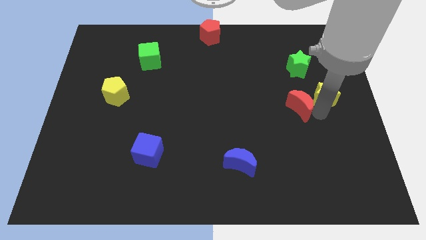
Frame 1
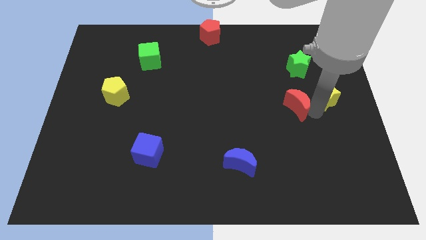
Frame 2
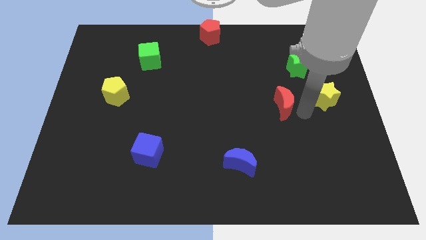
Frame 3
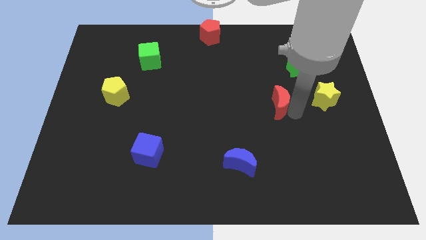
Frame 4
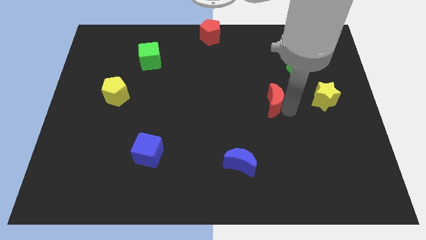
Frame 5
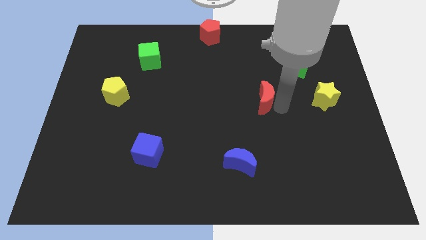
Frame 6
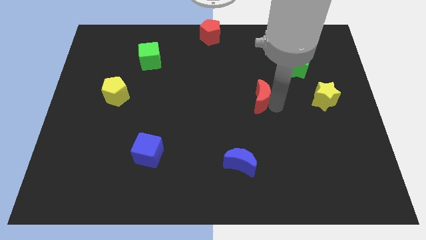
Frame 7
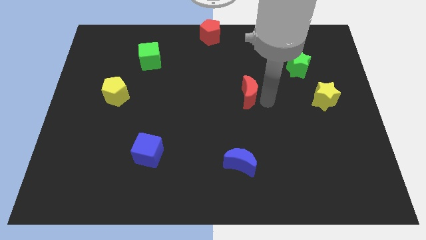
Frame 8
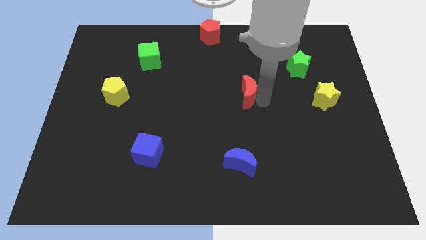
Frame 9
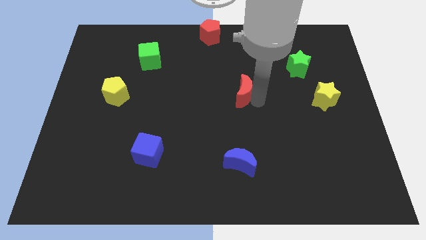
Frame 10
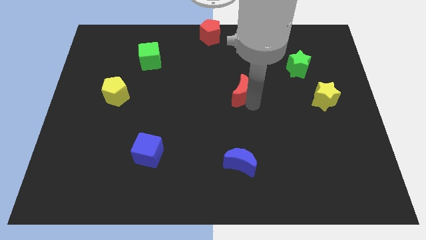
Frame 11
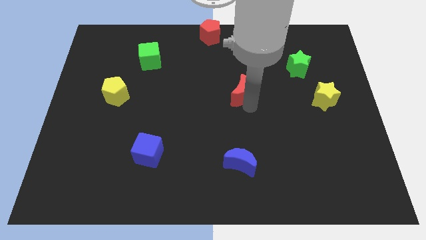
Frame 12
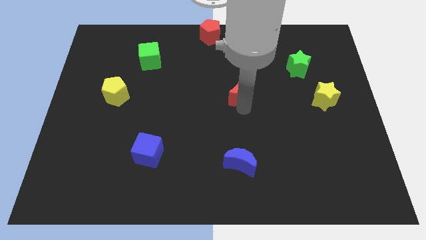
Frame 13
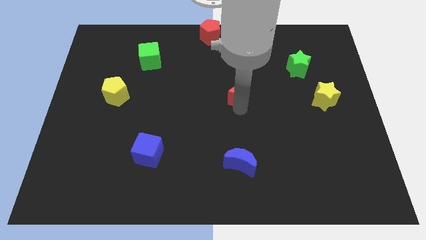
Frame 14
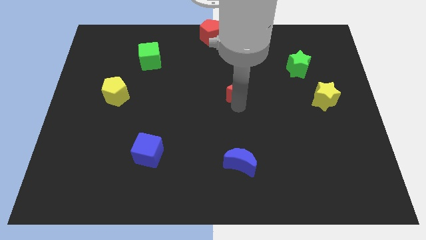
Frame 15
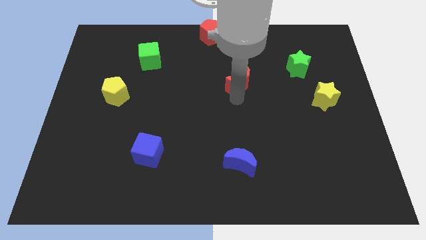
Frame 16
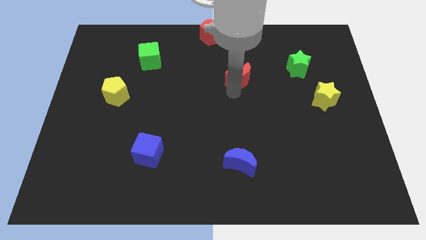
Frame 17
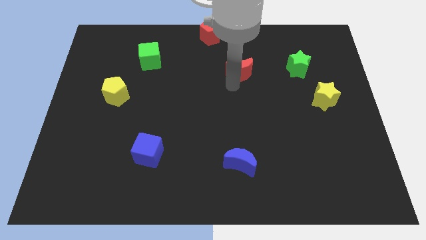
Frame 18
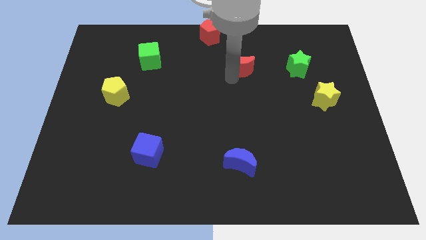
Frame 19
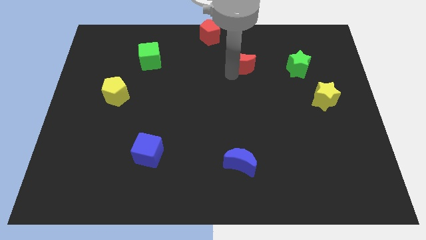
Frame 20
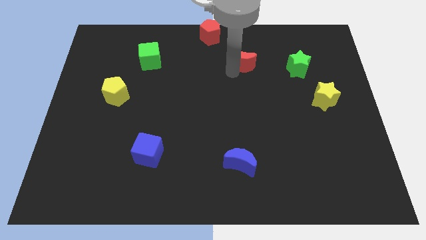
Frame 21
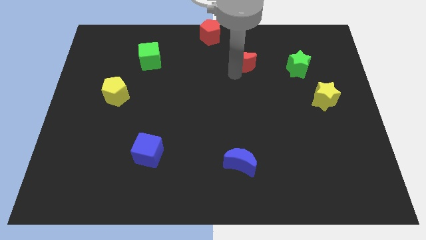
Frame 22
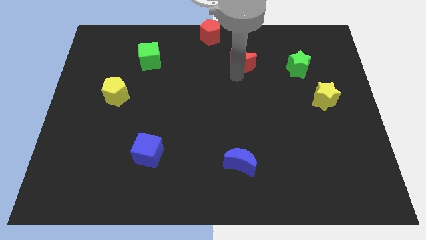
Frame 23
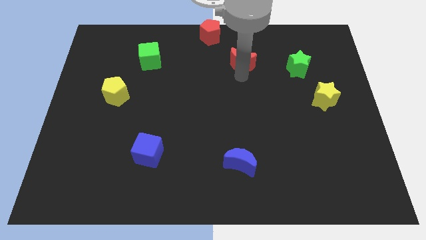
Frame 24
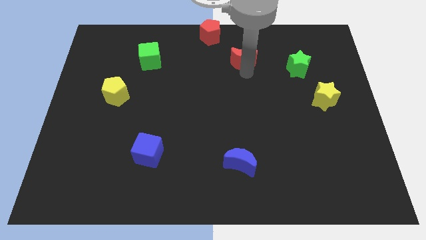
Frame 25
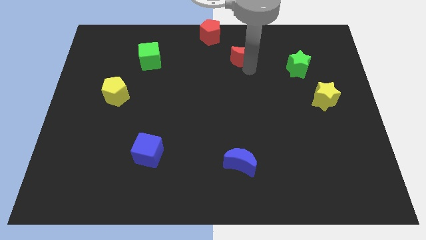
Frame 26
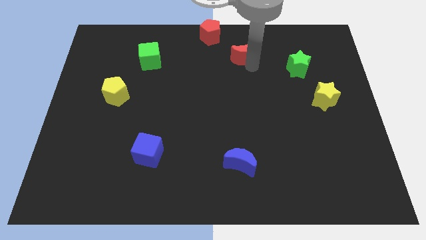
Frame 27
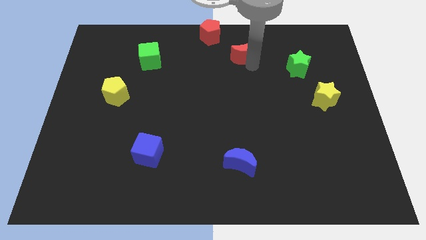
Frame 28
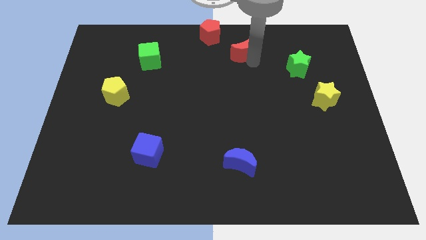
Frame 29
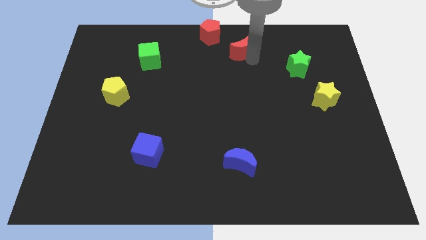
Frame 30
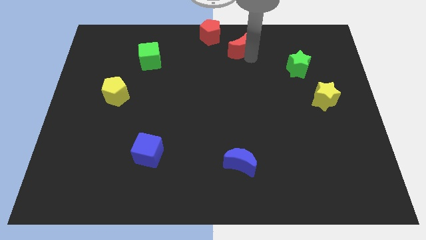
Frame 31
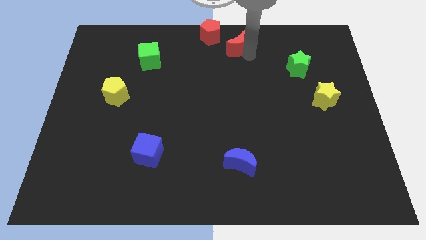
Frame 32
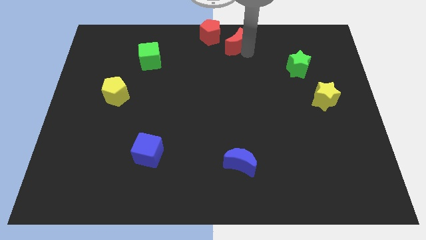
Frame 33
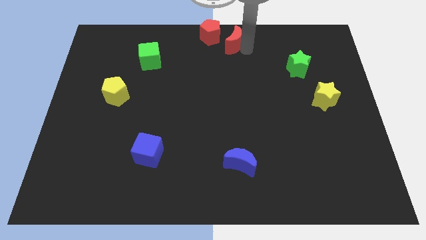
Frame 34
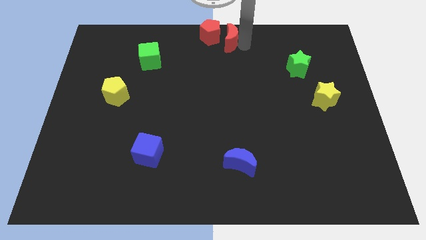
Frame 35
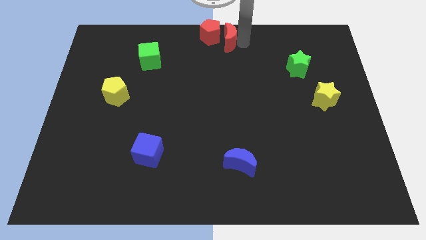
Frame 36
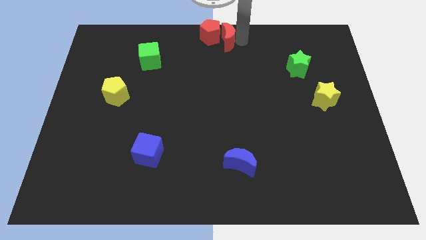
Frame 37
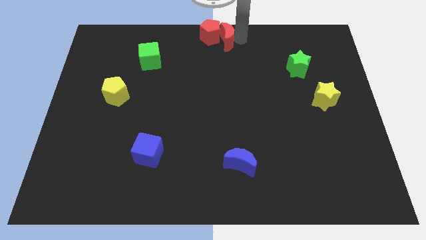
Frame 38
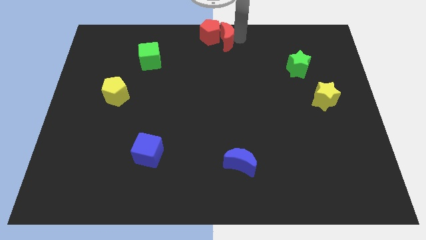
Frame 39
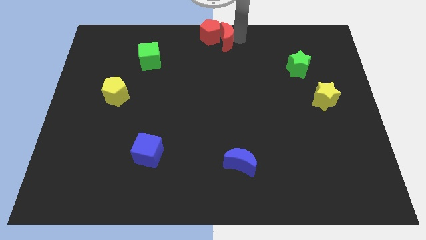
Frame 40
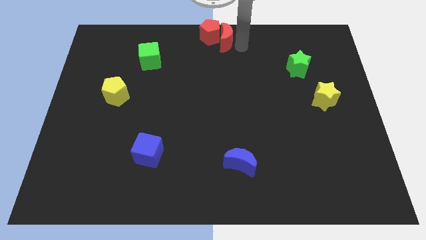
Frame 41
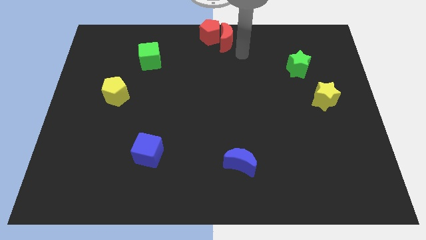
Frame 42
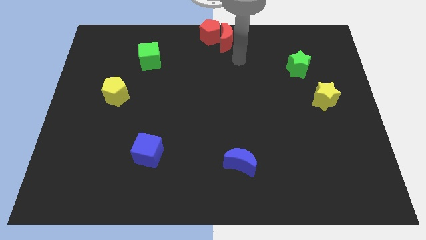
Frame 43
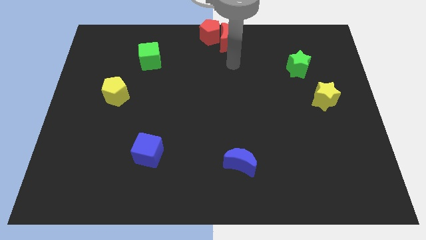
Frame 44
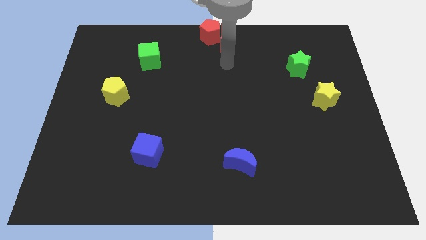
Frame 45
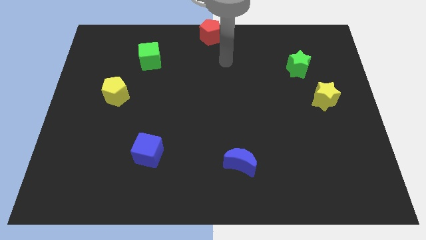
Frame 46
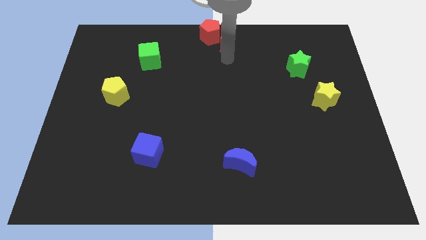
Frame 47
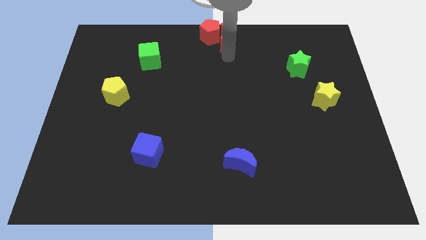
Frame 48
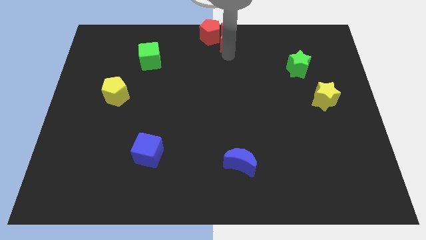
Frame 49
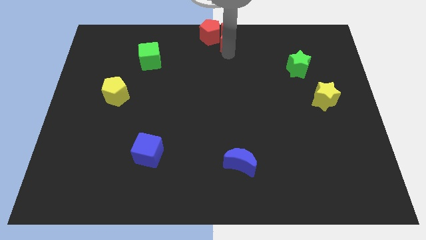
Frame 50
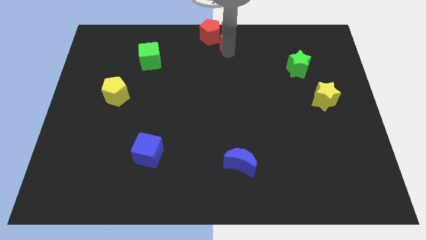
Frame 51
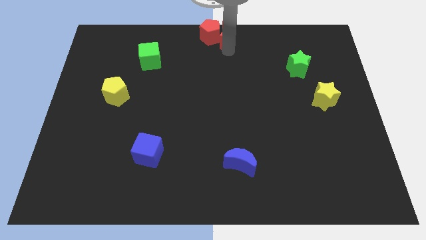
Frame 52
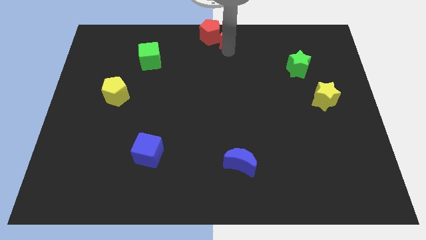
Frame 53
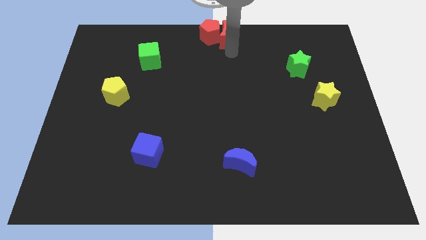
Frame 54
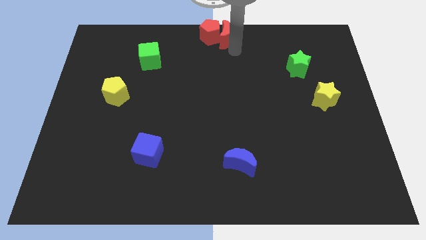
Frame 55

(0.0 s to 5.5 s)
move the red moon to the right of the red pentagon

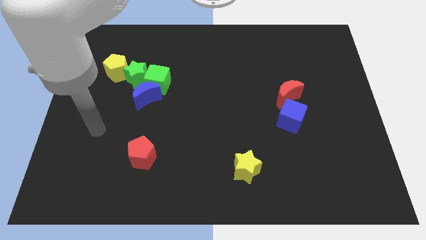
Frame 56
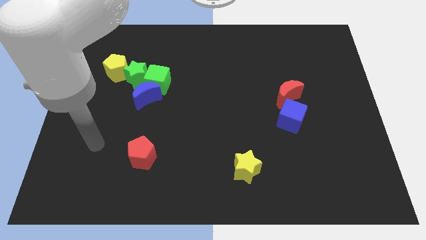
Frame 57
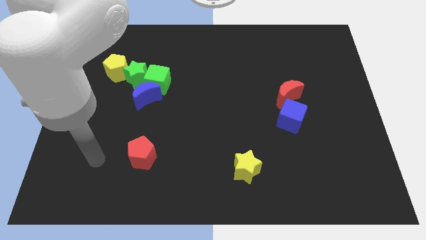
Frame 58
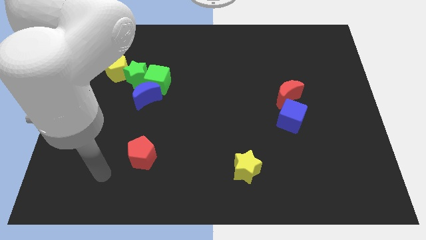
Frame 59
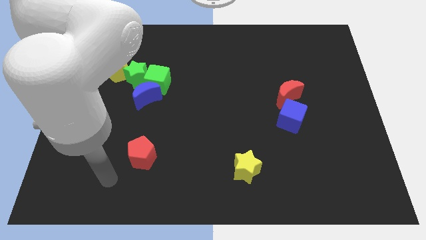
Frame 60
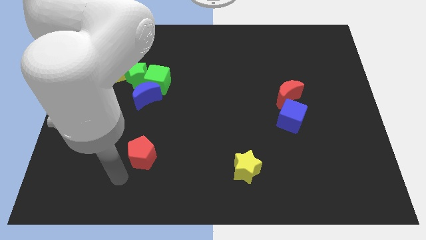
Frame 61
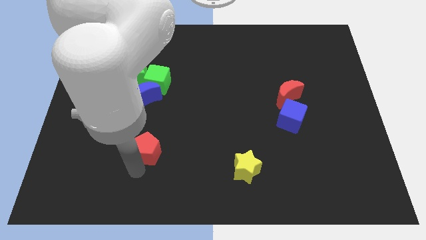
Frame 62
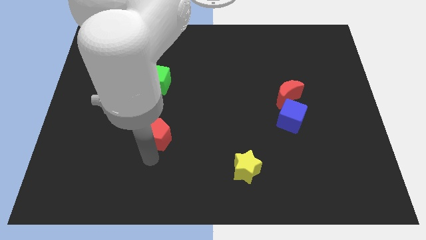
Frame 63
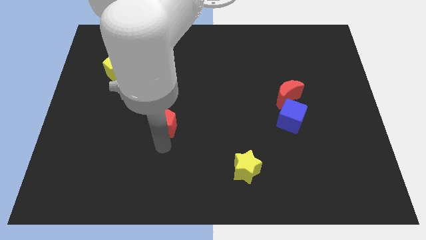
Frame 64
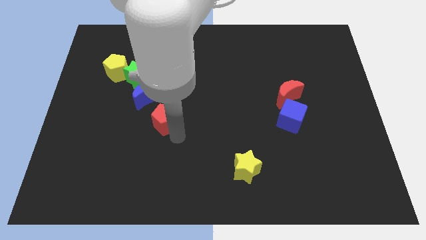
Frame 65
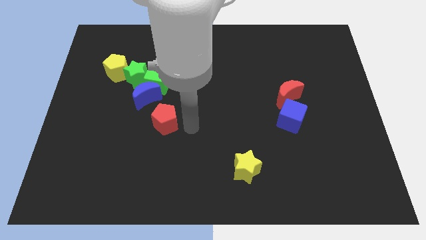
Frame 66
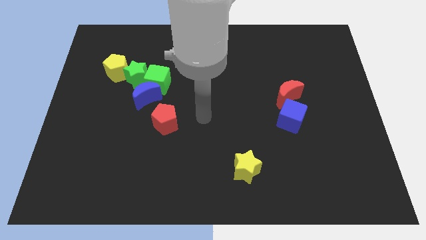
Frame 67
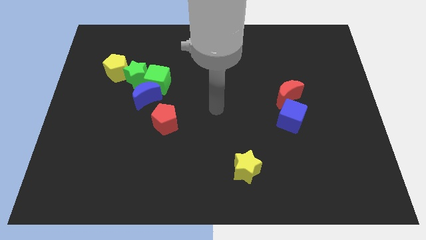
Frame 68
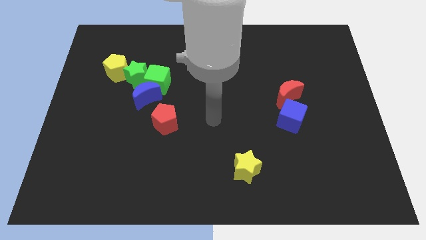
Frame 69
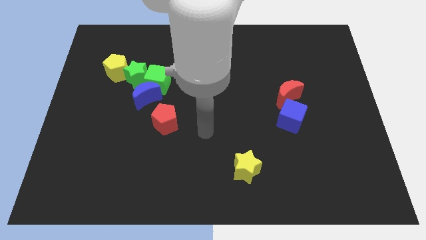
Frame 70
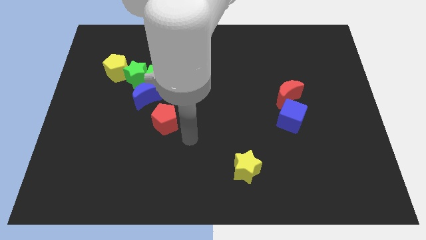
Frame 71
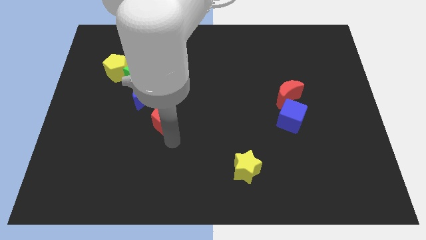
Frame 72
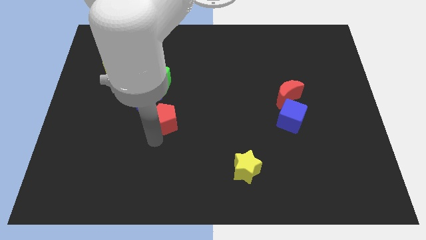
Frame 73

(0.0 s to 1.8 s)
push the red pentagon upward

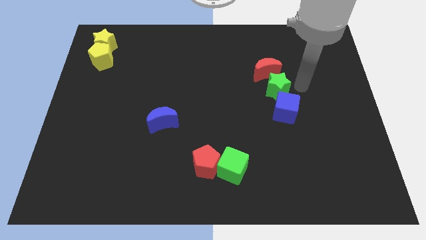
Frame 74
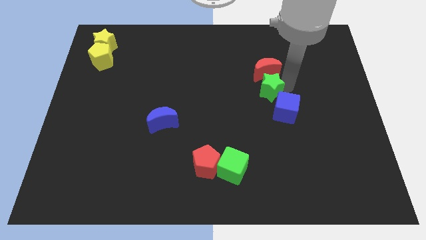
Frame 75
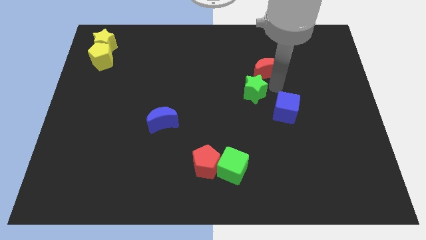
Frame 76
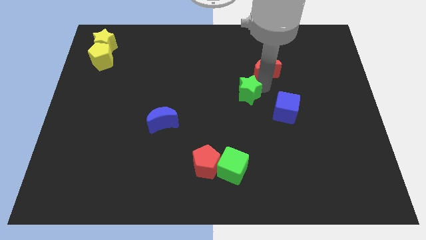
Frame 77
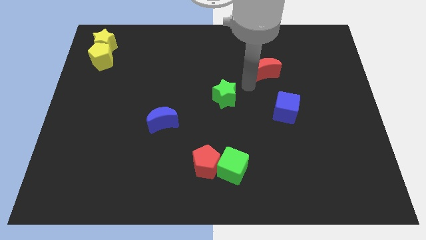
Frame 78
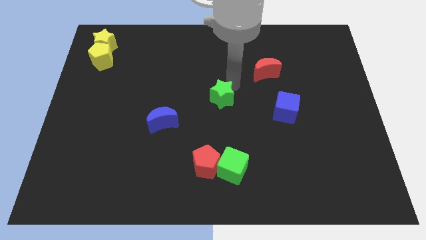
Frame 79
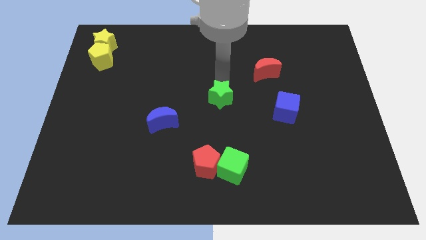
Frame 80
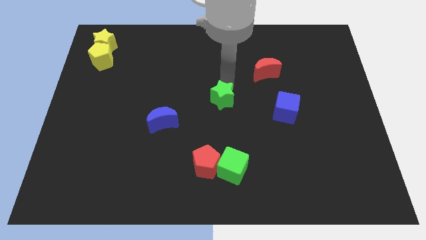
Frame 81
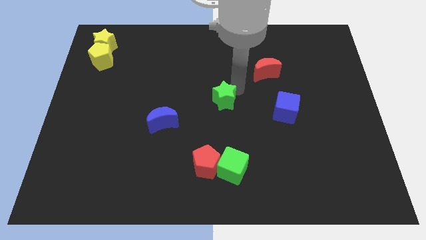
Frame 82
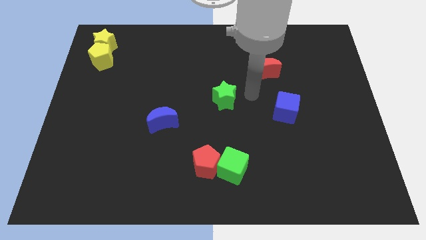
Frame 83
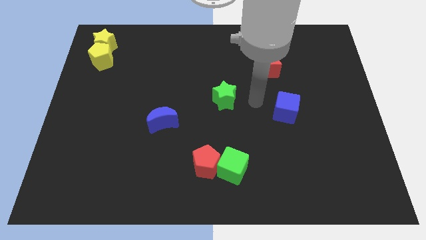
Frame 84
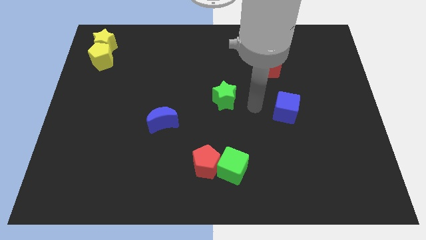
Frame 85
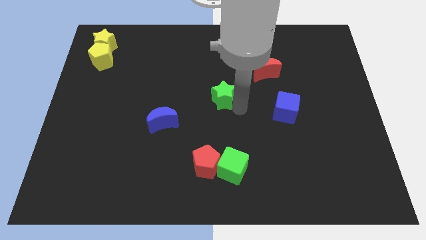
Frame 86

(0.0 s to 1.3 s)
place green star at the center of the board

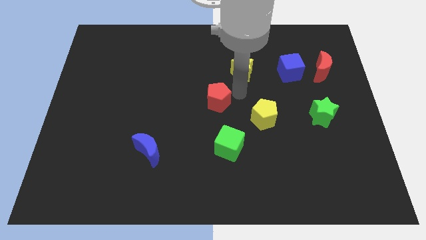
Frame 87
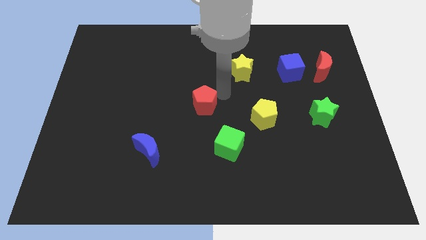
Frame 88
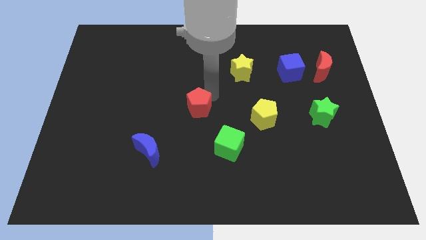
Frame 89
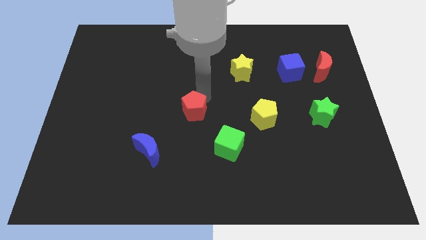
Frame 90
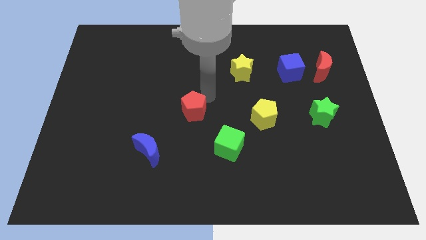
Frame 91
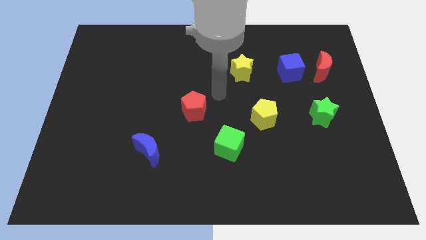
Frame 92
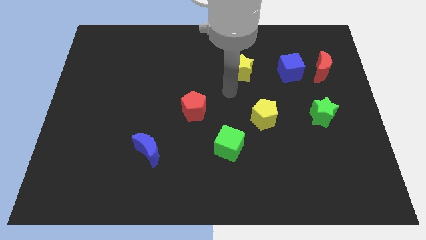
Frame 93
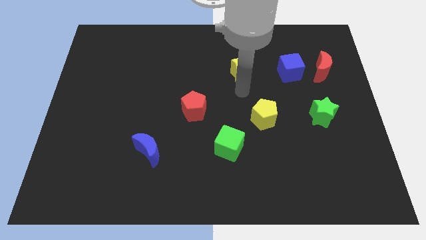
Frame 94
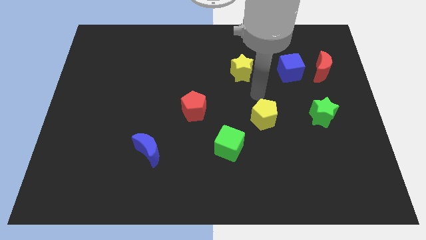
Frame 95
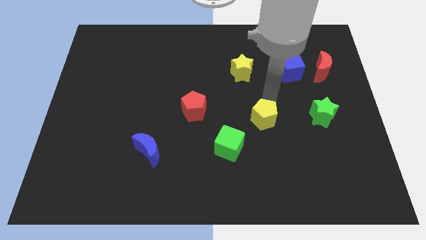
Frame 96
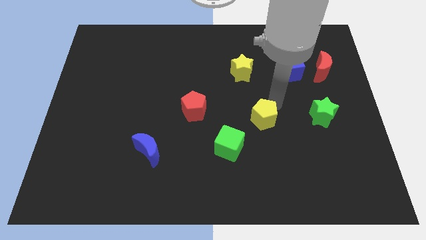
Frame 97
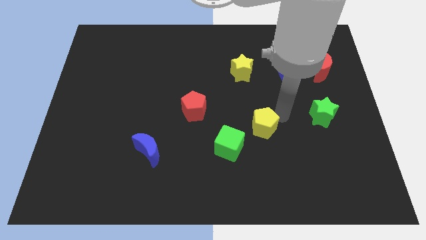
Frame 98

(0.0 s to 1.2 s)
place red pentagon to the top left of the green cube
